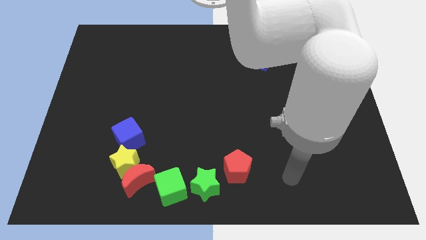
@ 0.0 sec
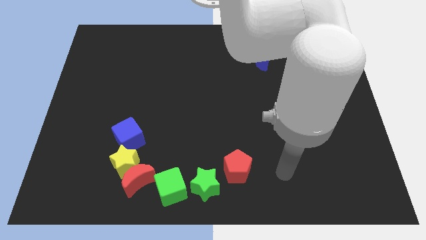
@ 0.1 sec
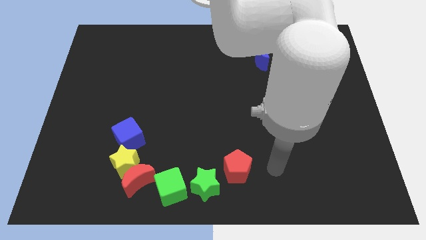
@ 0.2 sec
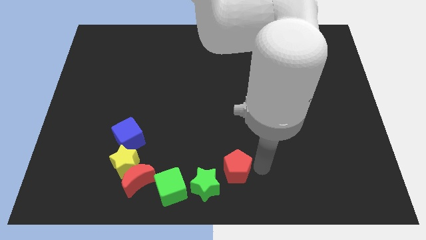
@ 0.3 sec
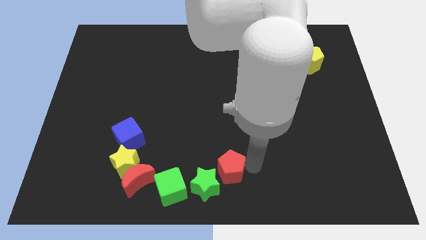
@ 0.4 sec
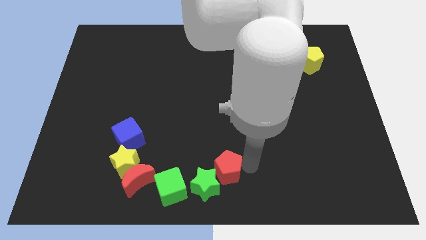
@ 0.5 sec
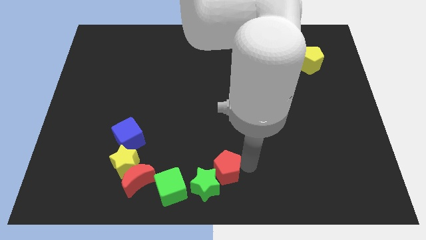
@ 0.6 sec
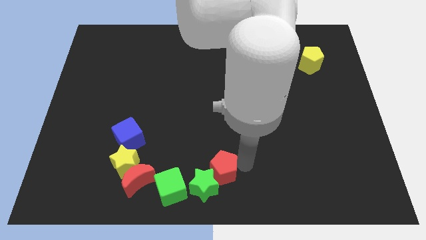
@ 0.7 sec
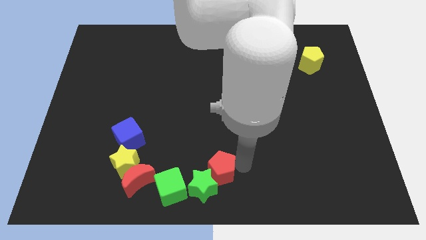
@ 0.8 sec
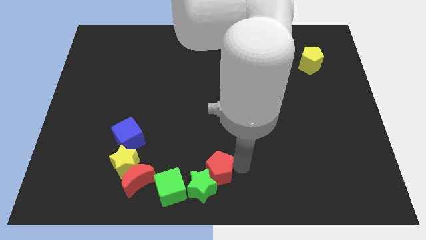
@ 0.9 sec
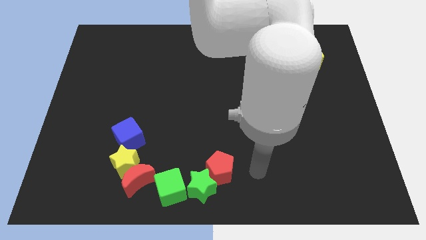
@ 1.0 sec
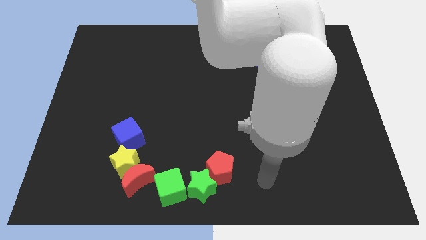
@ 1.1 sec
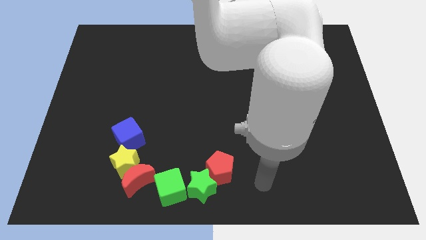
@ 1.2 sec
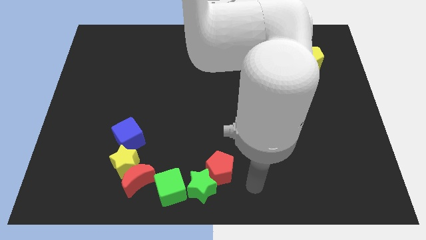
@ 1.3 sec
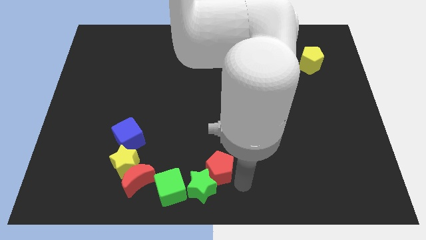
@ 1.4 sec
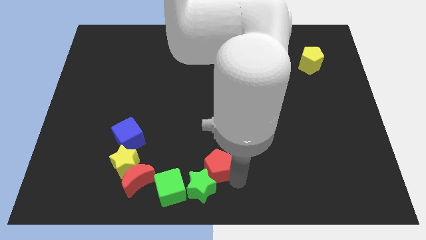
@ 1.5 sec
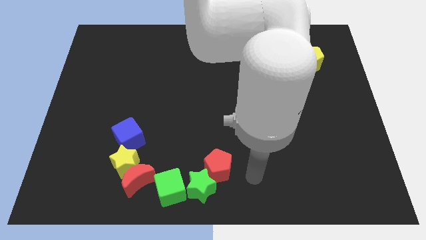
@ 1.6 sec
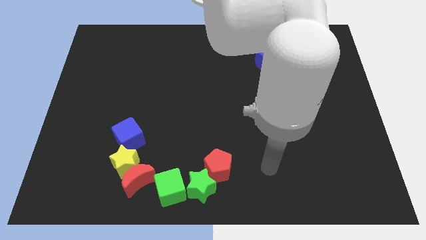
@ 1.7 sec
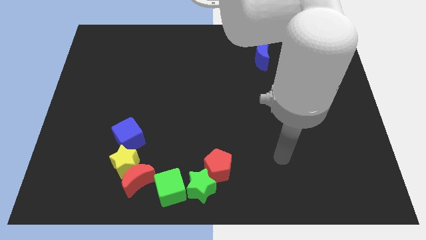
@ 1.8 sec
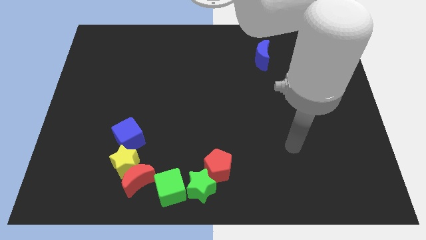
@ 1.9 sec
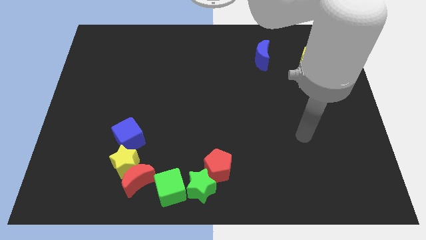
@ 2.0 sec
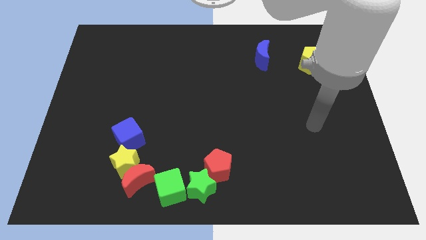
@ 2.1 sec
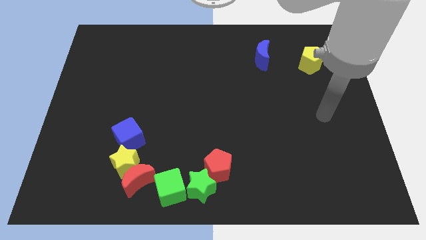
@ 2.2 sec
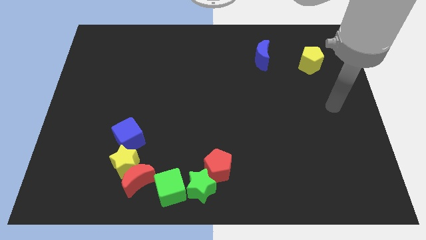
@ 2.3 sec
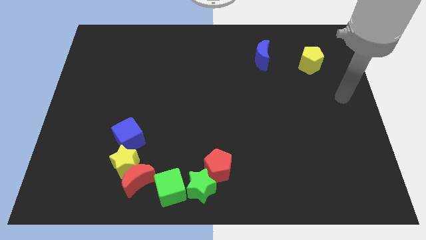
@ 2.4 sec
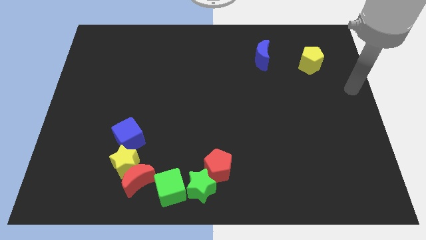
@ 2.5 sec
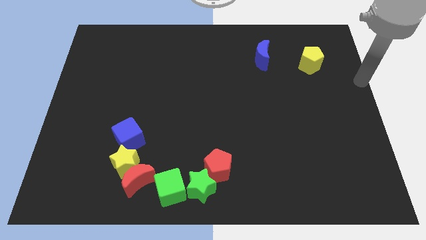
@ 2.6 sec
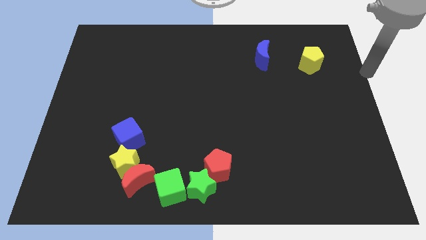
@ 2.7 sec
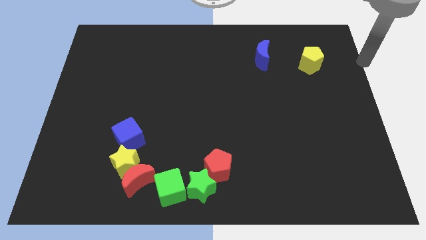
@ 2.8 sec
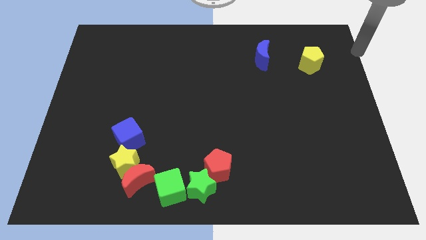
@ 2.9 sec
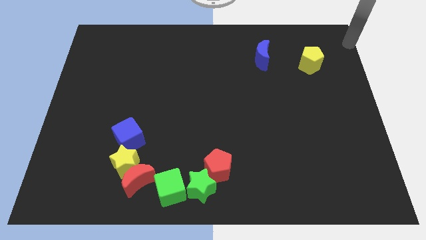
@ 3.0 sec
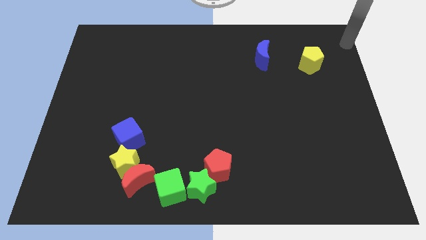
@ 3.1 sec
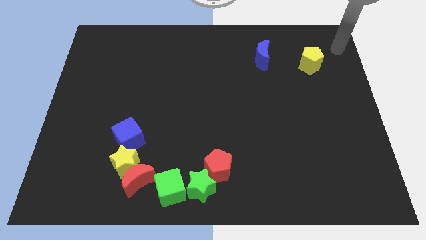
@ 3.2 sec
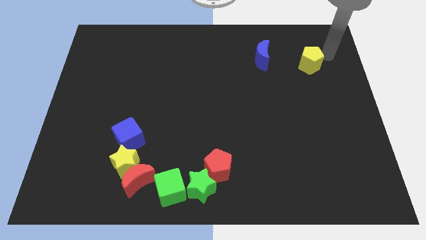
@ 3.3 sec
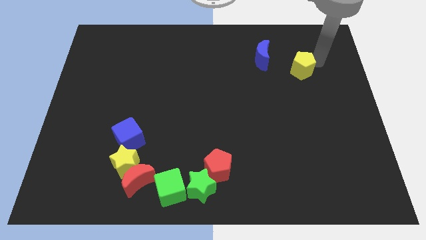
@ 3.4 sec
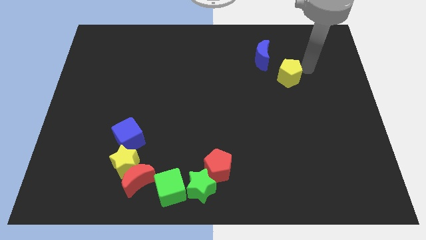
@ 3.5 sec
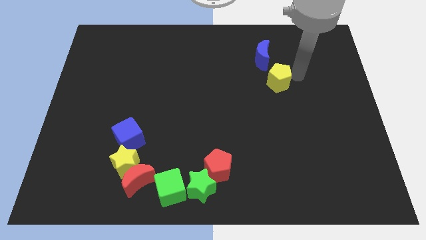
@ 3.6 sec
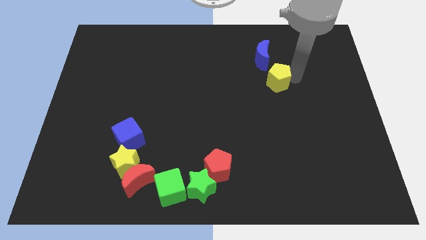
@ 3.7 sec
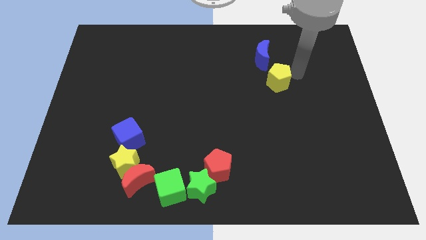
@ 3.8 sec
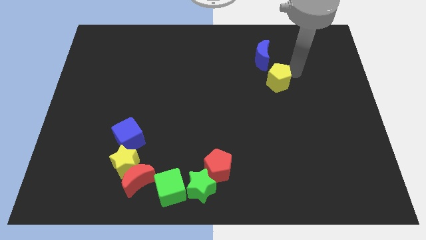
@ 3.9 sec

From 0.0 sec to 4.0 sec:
place yellow pentagon below the blue moon

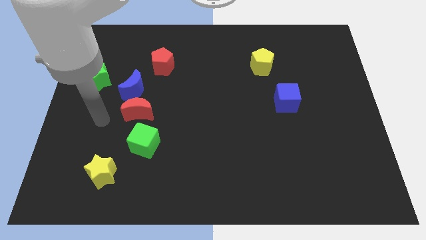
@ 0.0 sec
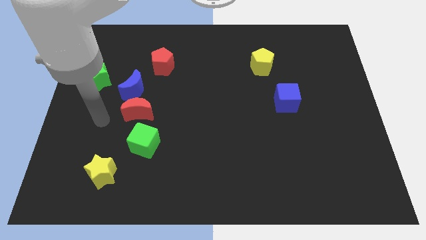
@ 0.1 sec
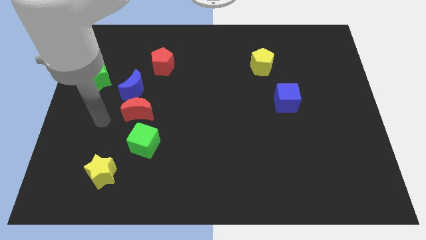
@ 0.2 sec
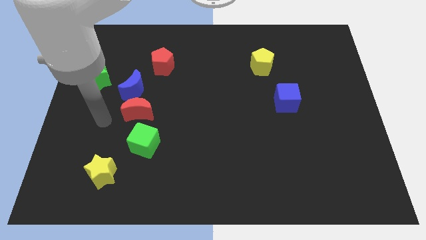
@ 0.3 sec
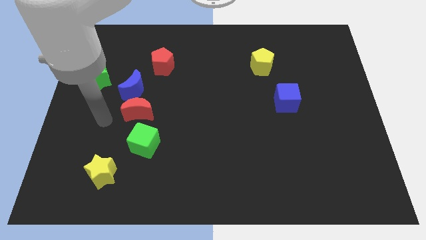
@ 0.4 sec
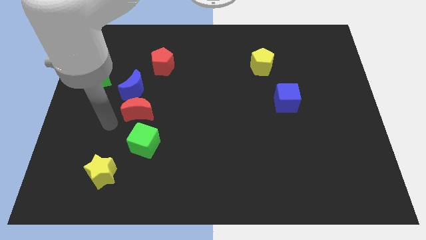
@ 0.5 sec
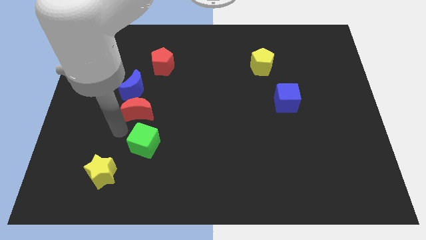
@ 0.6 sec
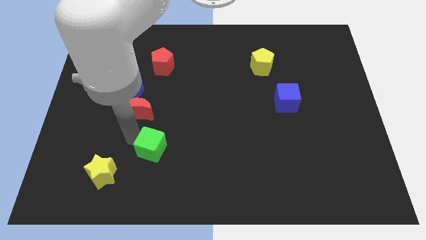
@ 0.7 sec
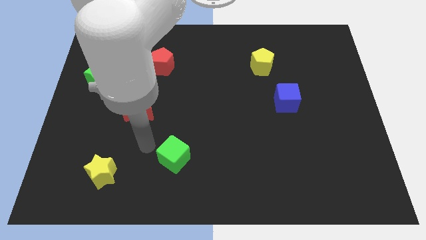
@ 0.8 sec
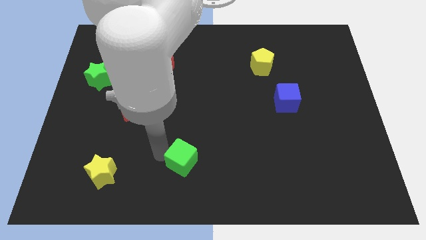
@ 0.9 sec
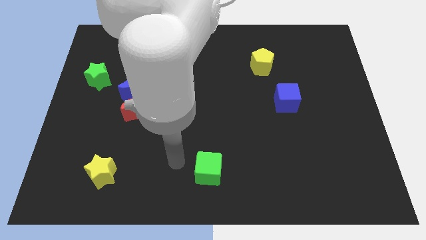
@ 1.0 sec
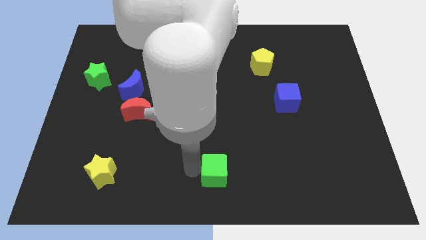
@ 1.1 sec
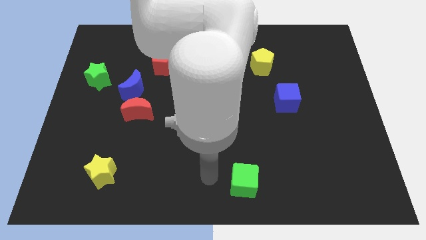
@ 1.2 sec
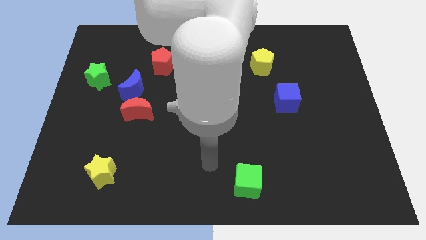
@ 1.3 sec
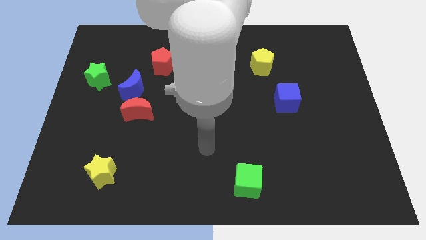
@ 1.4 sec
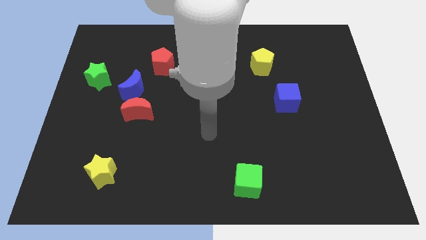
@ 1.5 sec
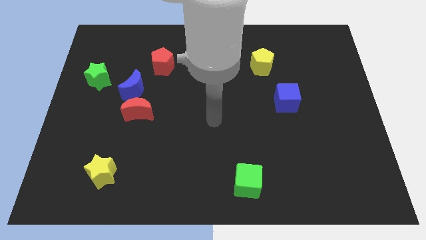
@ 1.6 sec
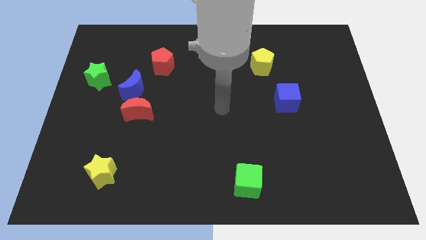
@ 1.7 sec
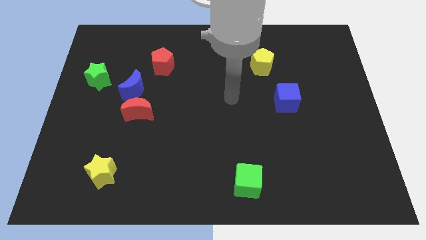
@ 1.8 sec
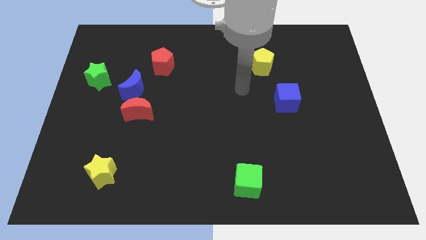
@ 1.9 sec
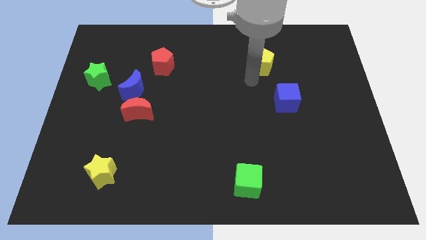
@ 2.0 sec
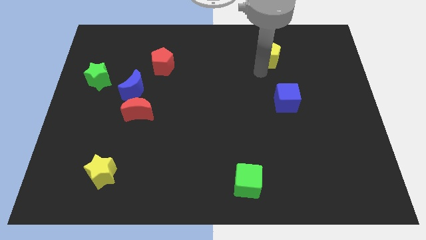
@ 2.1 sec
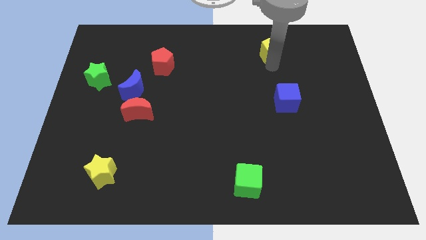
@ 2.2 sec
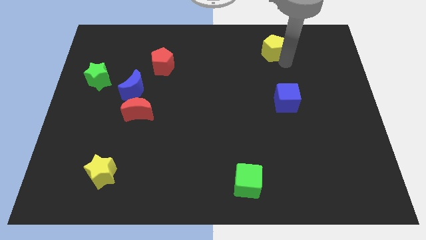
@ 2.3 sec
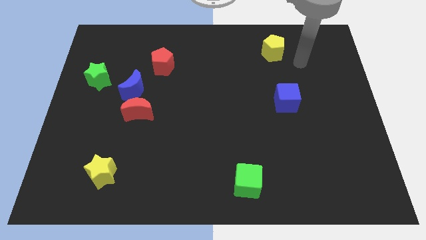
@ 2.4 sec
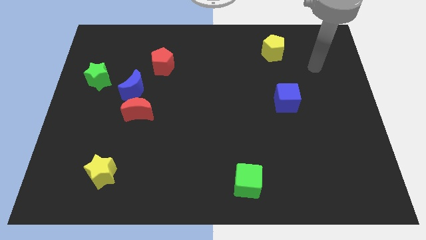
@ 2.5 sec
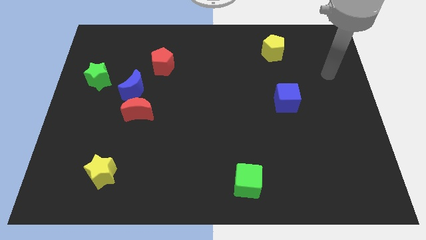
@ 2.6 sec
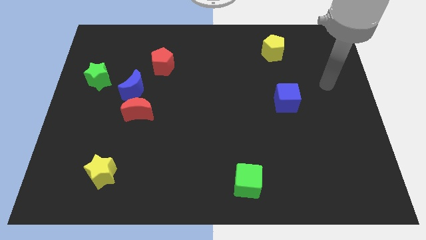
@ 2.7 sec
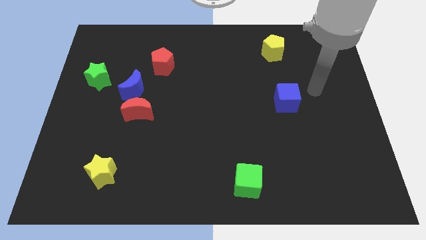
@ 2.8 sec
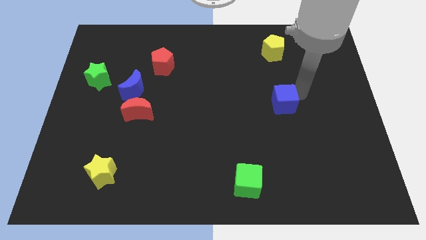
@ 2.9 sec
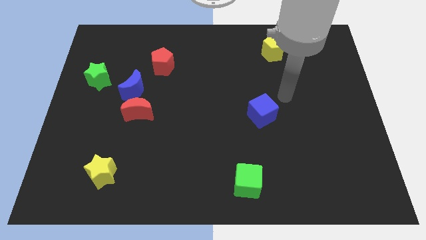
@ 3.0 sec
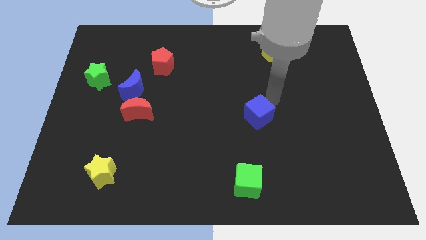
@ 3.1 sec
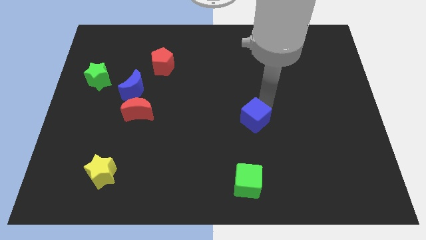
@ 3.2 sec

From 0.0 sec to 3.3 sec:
put the blue cube vertically above the green cube

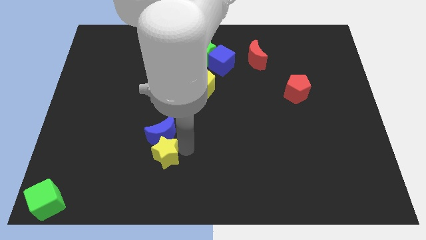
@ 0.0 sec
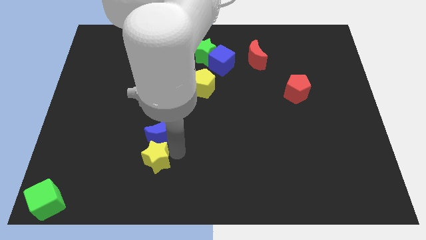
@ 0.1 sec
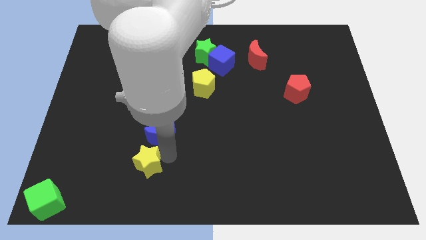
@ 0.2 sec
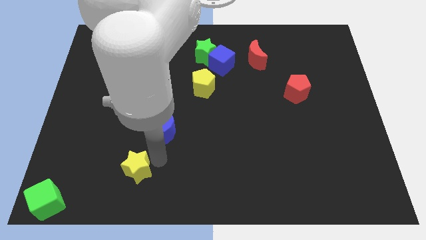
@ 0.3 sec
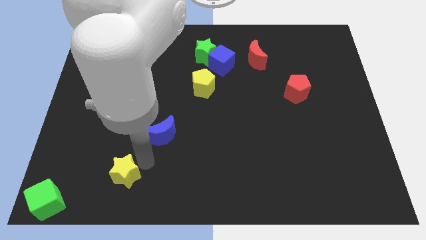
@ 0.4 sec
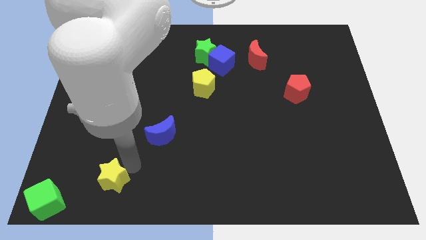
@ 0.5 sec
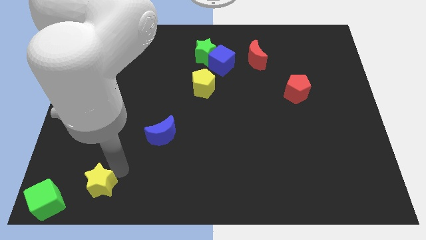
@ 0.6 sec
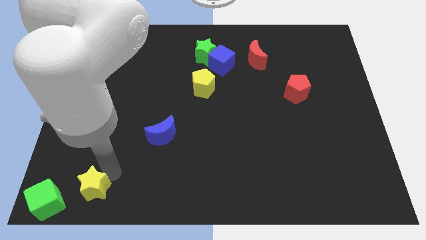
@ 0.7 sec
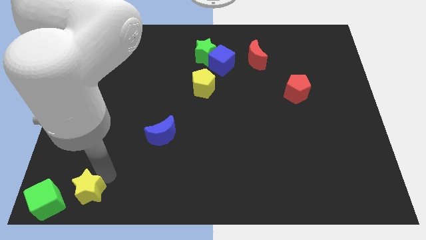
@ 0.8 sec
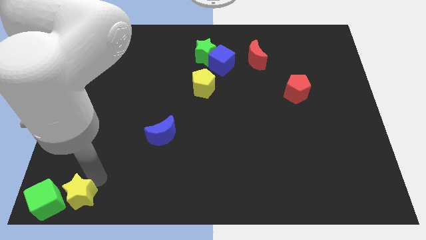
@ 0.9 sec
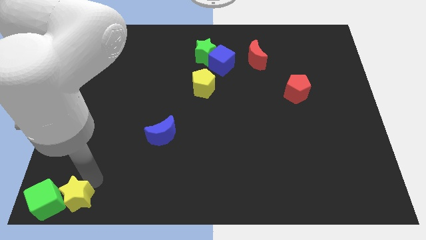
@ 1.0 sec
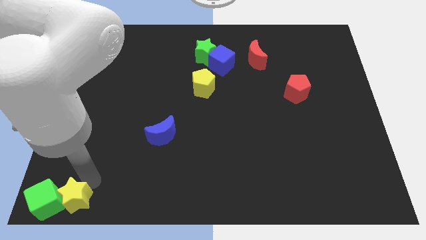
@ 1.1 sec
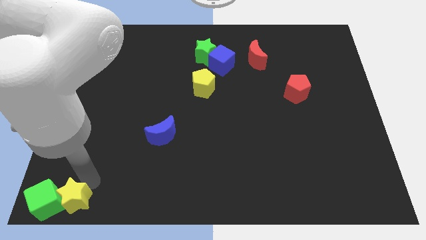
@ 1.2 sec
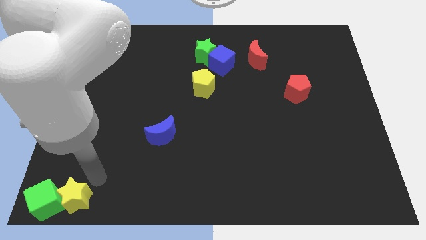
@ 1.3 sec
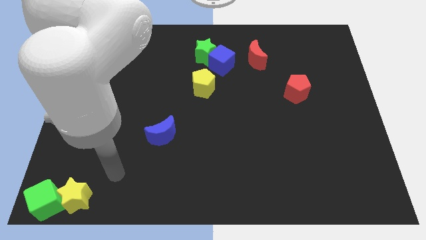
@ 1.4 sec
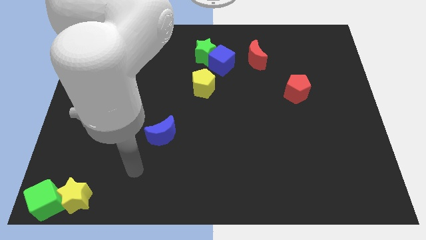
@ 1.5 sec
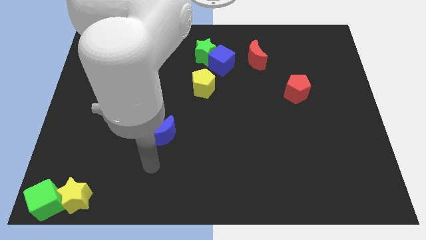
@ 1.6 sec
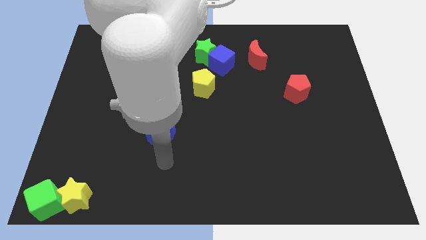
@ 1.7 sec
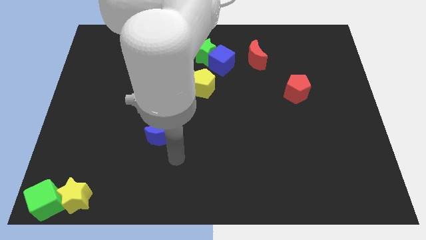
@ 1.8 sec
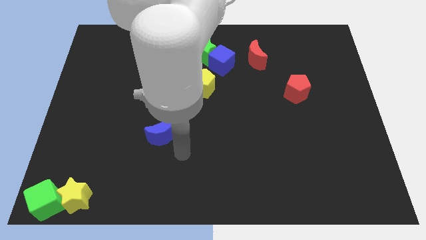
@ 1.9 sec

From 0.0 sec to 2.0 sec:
push the yellow star to the bottom left of the board
